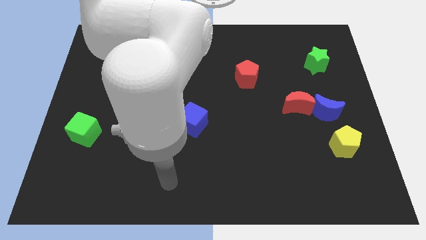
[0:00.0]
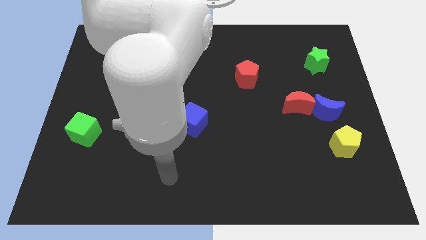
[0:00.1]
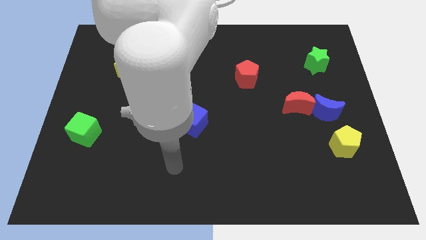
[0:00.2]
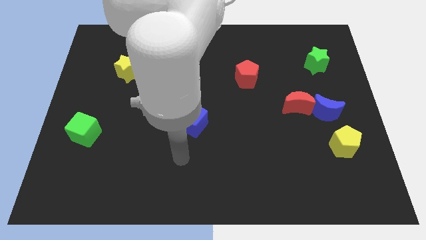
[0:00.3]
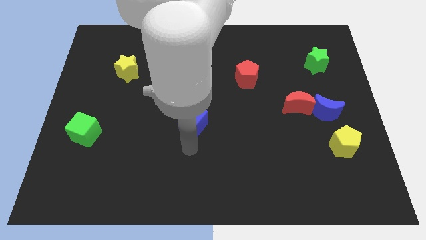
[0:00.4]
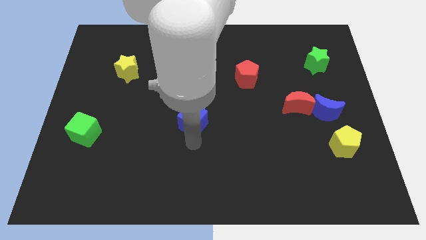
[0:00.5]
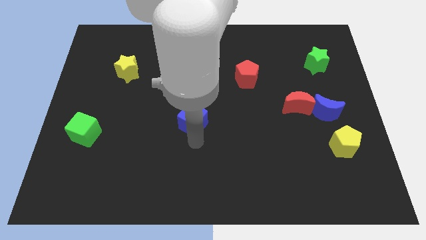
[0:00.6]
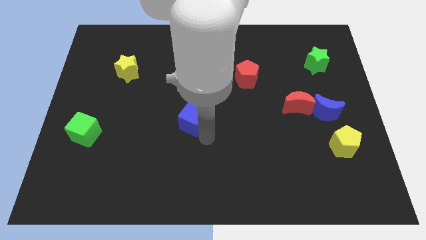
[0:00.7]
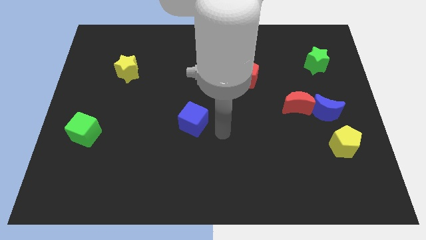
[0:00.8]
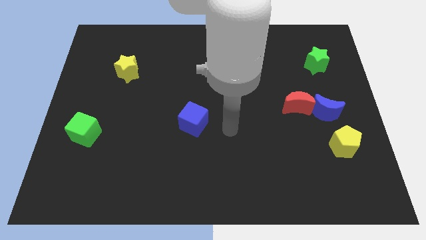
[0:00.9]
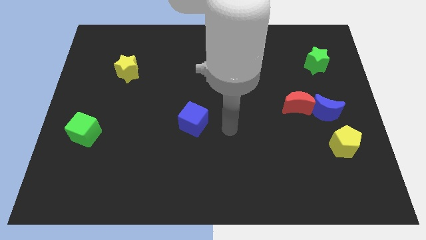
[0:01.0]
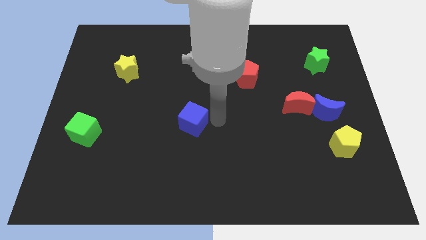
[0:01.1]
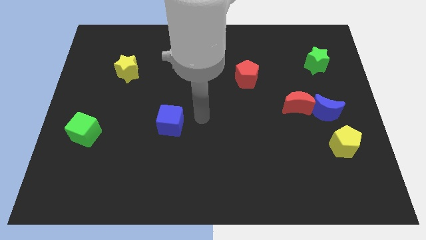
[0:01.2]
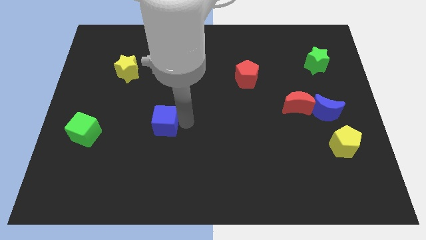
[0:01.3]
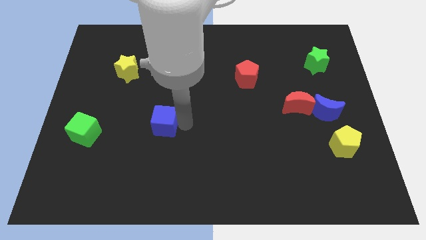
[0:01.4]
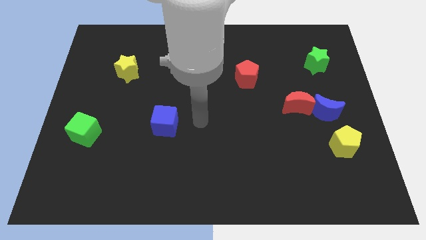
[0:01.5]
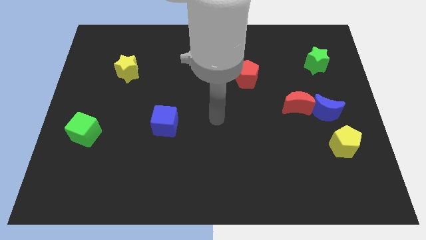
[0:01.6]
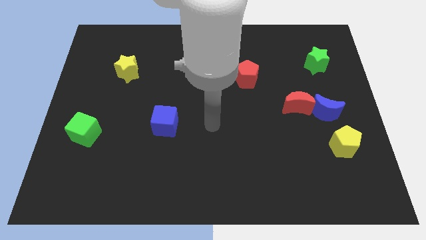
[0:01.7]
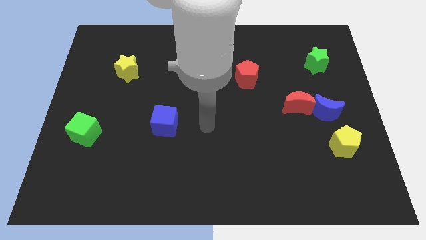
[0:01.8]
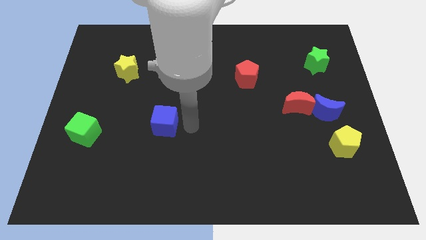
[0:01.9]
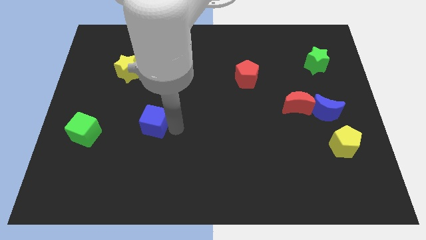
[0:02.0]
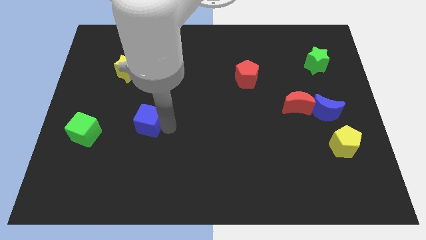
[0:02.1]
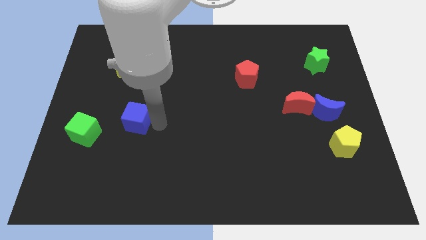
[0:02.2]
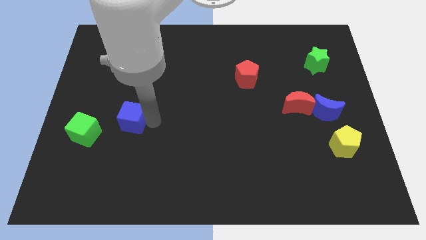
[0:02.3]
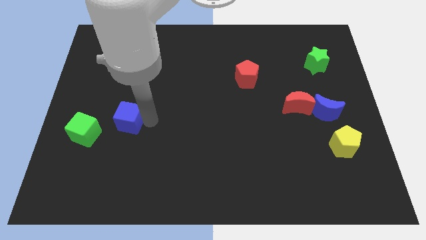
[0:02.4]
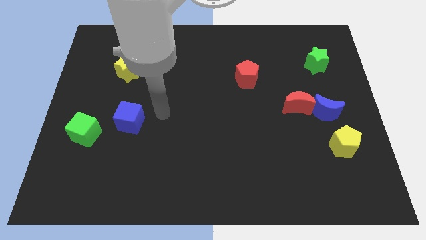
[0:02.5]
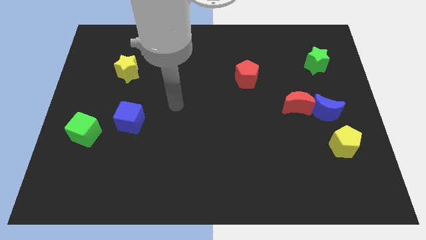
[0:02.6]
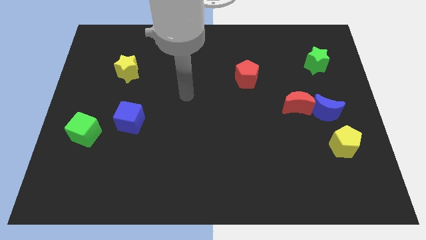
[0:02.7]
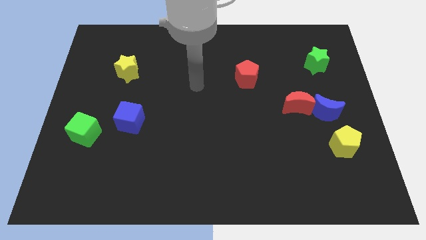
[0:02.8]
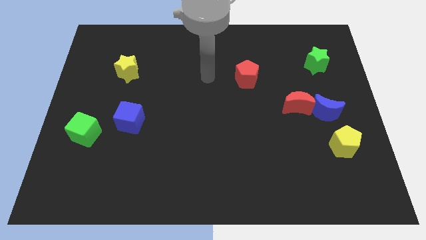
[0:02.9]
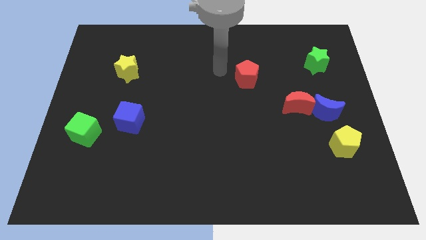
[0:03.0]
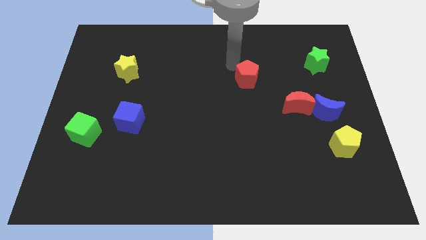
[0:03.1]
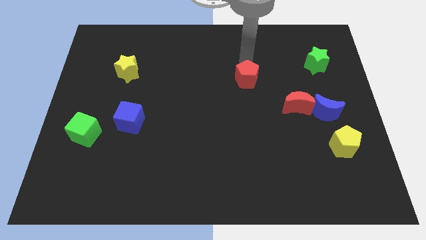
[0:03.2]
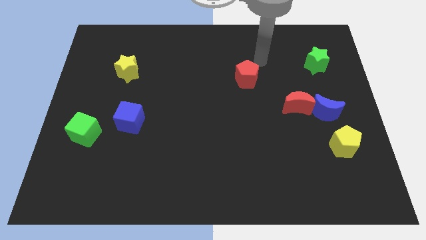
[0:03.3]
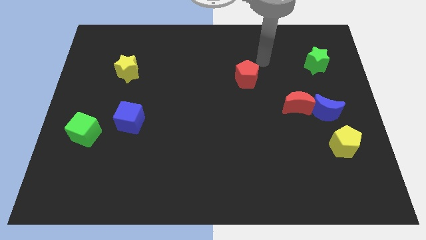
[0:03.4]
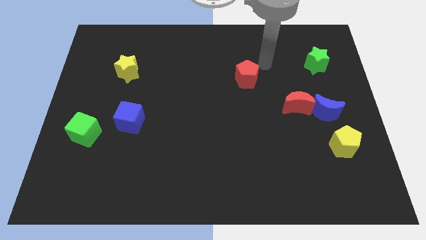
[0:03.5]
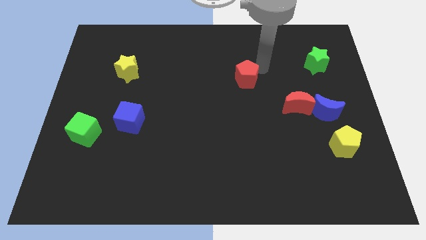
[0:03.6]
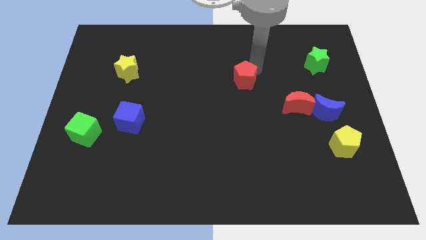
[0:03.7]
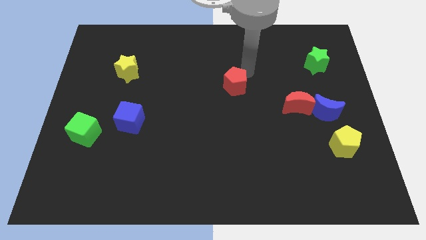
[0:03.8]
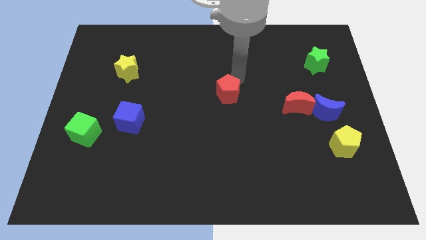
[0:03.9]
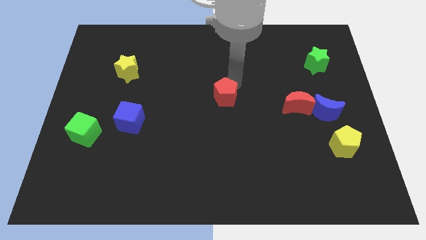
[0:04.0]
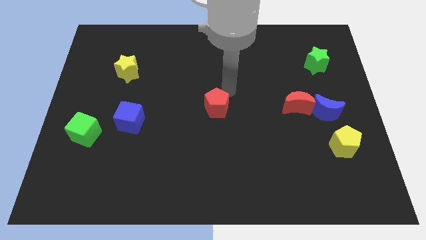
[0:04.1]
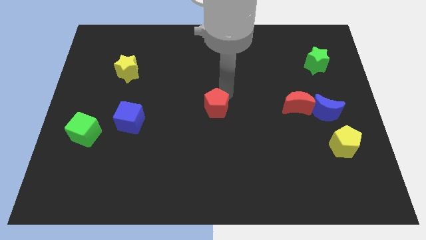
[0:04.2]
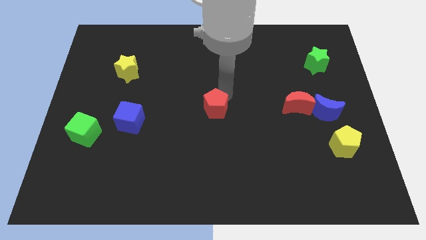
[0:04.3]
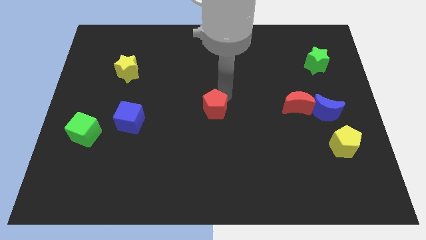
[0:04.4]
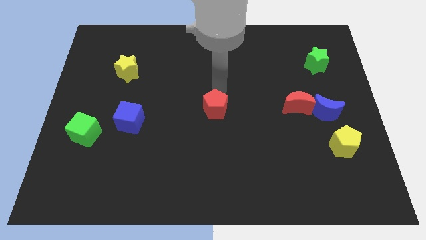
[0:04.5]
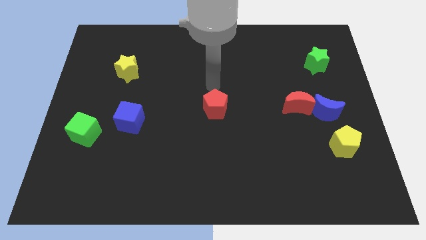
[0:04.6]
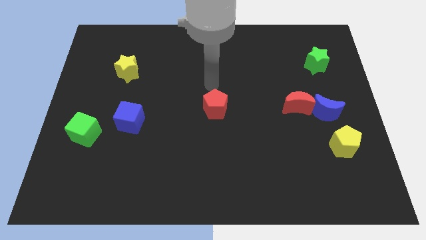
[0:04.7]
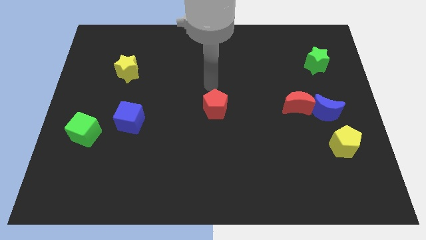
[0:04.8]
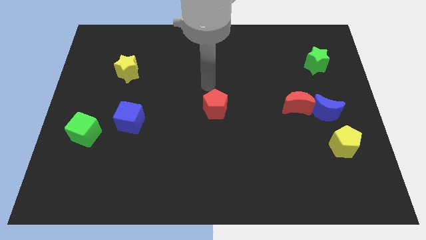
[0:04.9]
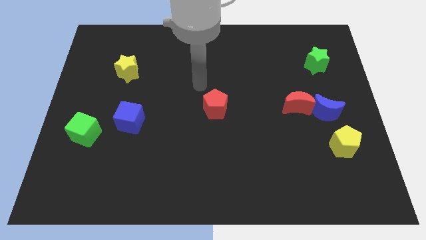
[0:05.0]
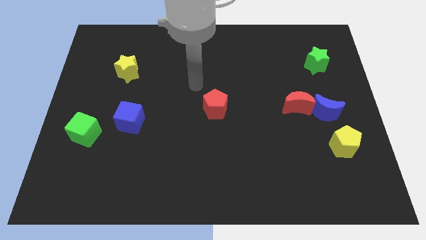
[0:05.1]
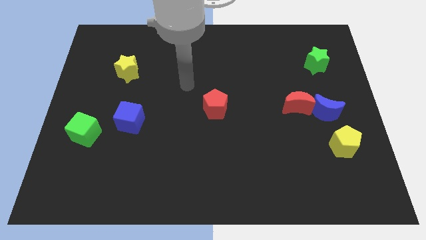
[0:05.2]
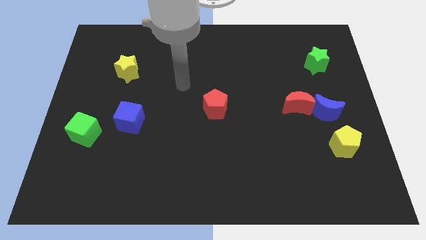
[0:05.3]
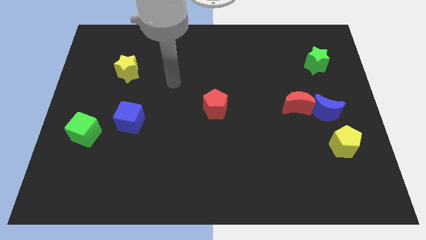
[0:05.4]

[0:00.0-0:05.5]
place the red pentagon at the center of the board

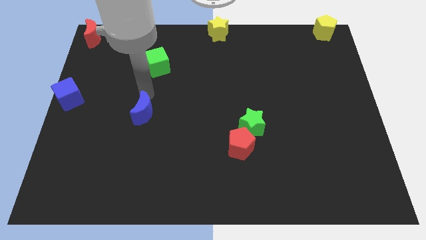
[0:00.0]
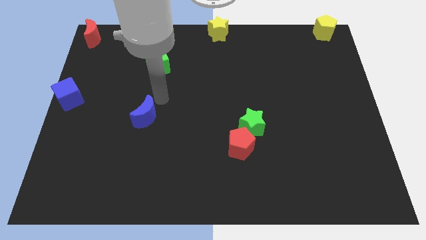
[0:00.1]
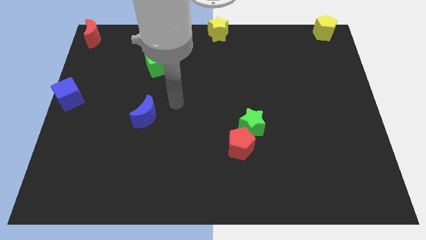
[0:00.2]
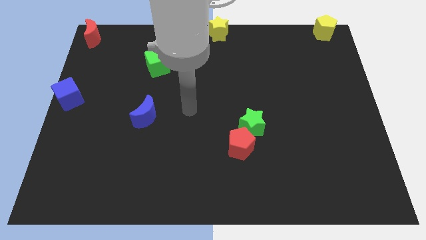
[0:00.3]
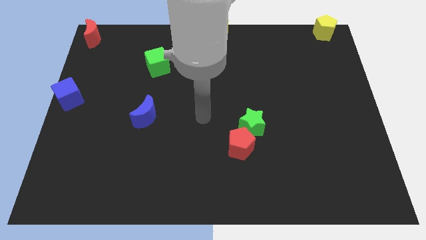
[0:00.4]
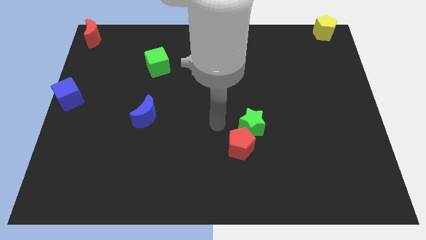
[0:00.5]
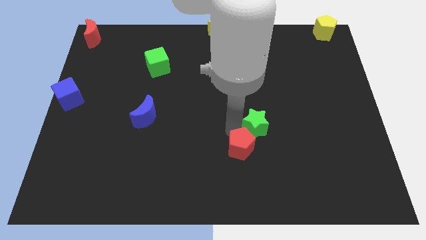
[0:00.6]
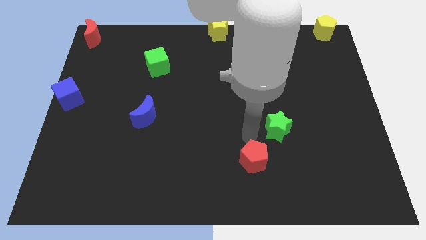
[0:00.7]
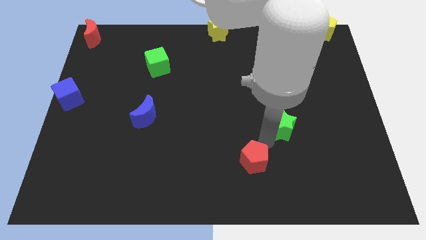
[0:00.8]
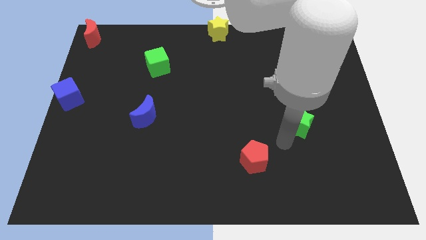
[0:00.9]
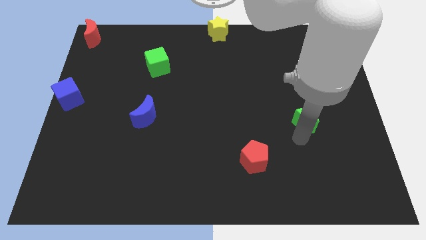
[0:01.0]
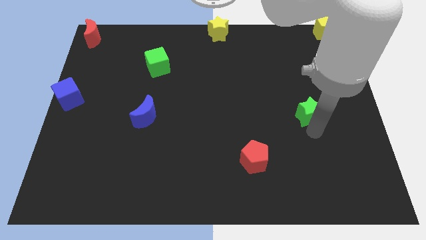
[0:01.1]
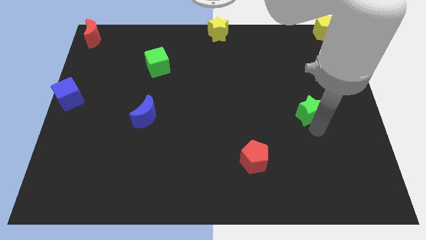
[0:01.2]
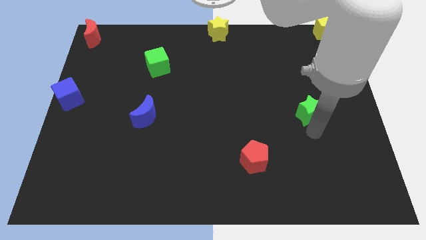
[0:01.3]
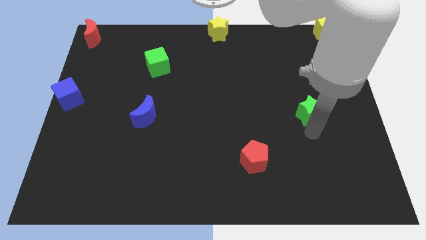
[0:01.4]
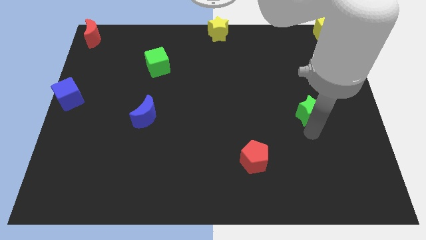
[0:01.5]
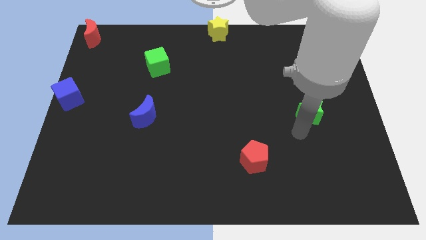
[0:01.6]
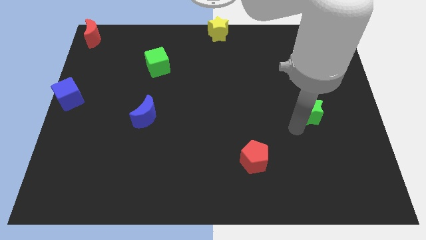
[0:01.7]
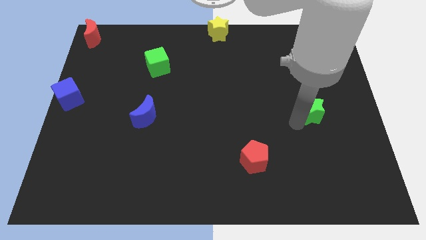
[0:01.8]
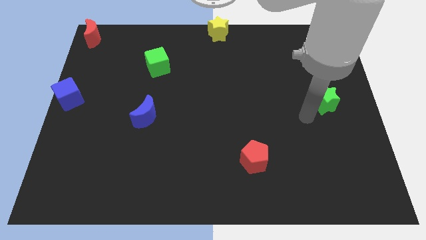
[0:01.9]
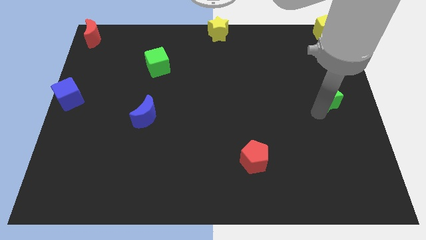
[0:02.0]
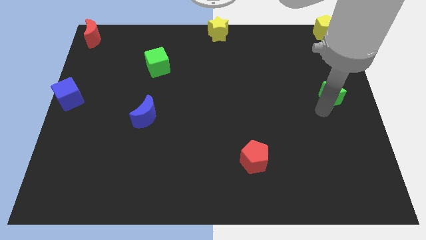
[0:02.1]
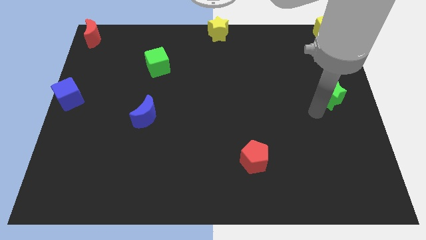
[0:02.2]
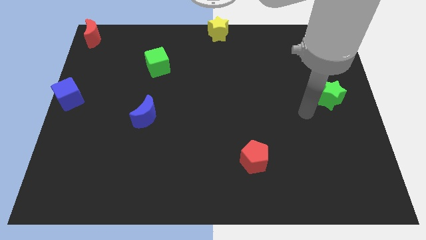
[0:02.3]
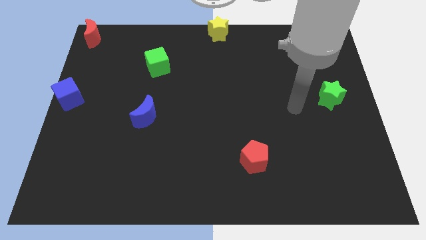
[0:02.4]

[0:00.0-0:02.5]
seperate green star from red pentagon

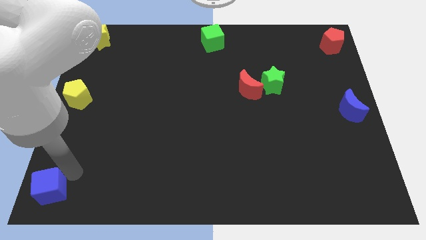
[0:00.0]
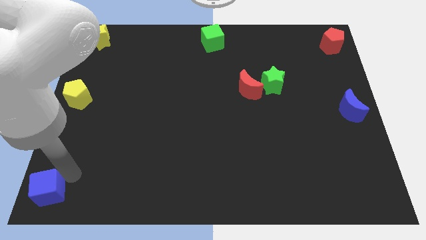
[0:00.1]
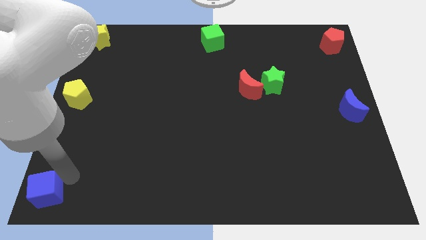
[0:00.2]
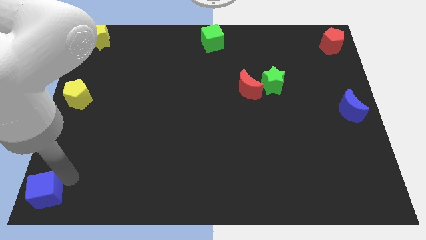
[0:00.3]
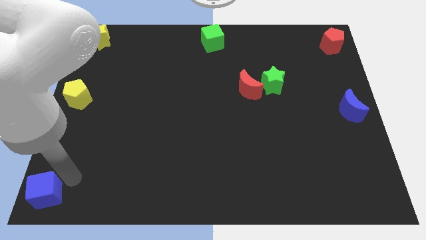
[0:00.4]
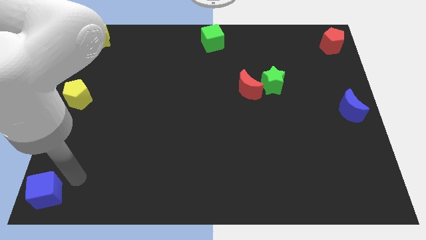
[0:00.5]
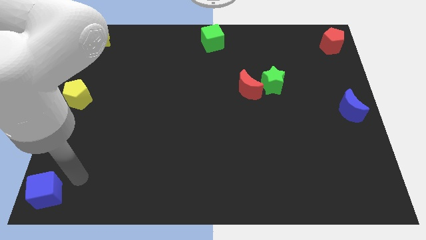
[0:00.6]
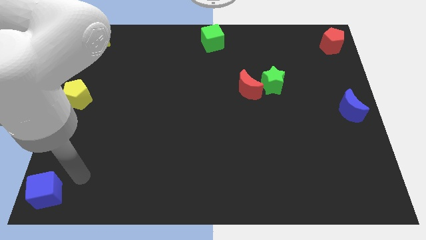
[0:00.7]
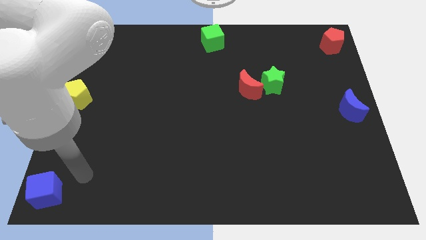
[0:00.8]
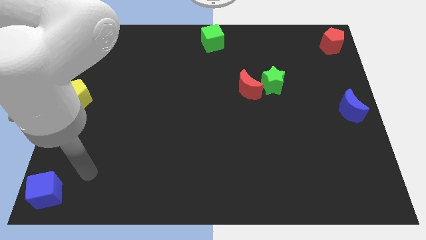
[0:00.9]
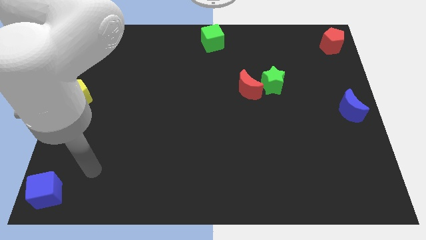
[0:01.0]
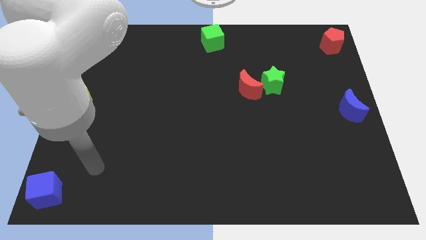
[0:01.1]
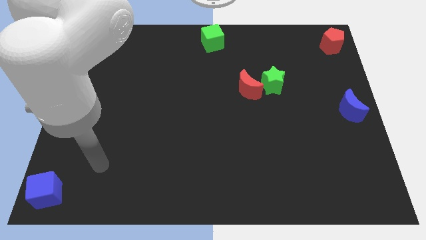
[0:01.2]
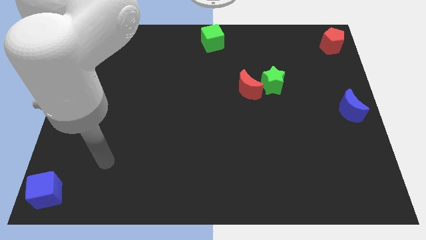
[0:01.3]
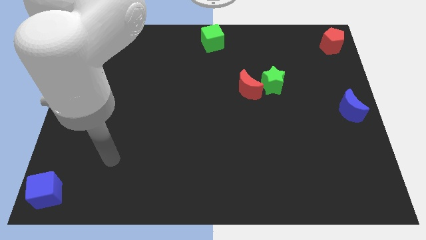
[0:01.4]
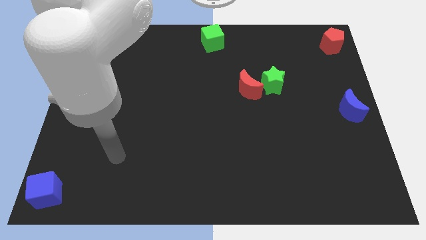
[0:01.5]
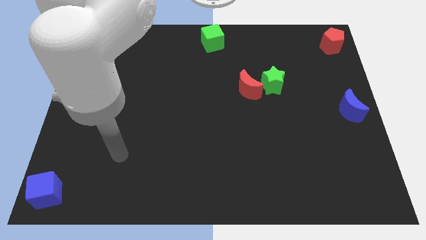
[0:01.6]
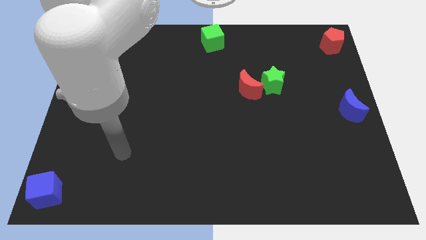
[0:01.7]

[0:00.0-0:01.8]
move the blue cube to the bottom left corner of the board
